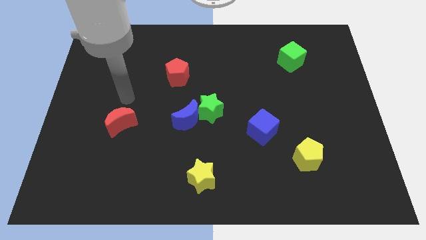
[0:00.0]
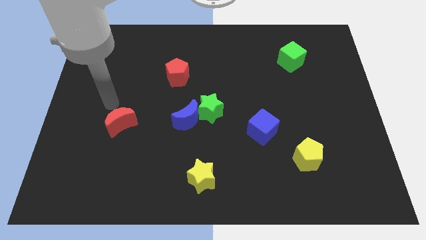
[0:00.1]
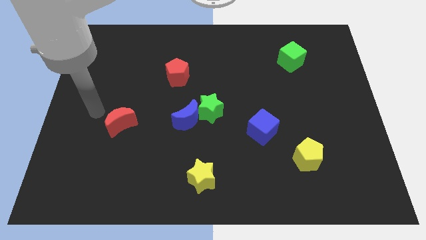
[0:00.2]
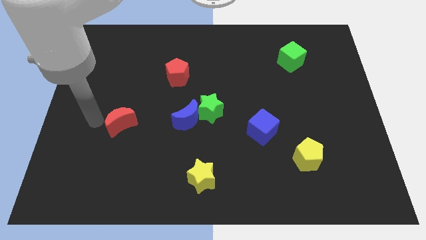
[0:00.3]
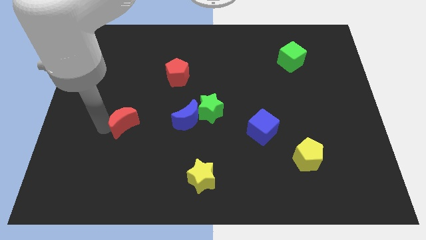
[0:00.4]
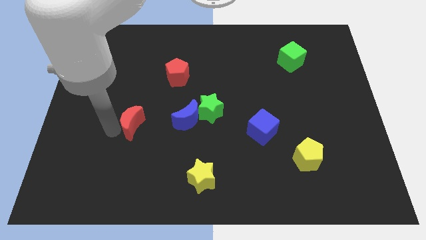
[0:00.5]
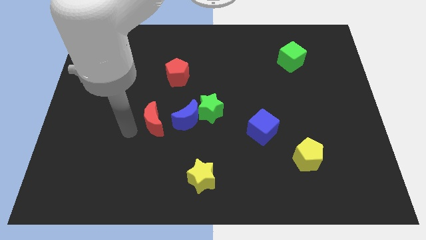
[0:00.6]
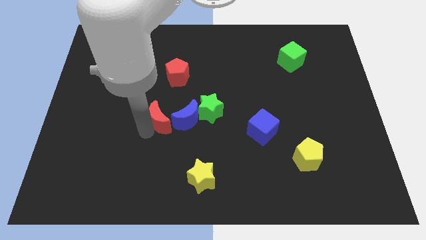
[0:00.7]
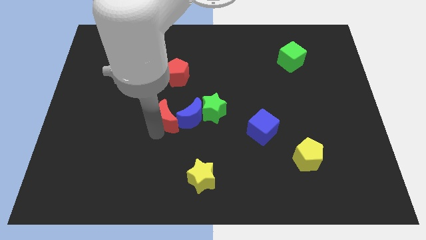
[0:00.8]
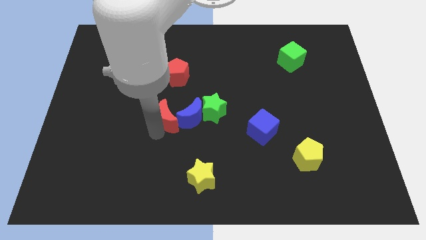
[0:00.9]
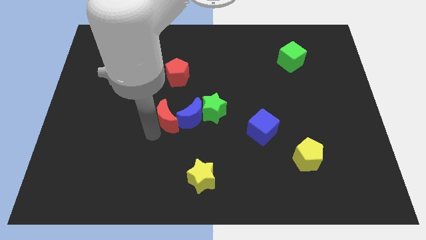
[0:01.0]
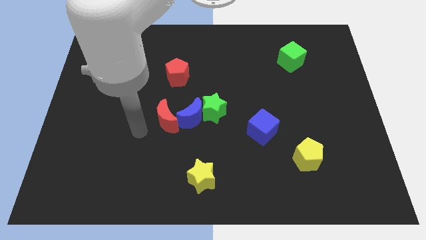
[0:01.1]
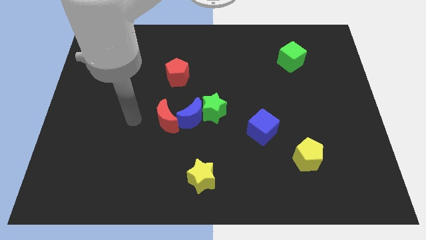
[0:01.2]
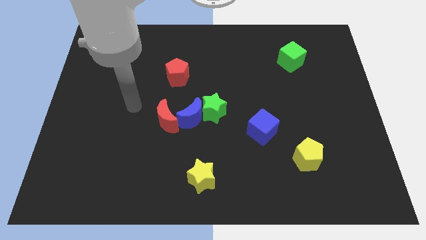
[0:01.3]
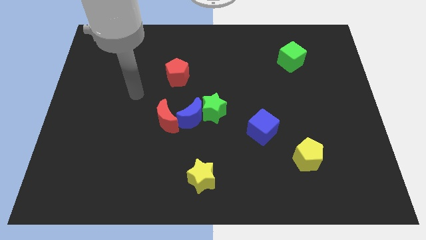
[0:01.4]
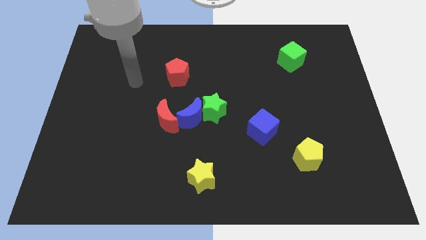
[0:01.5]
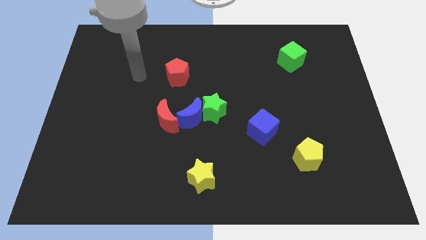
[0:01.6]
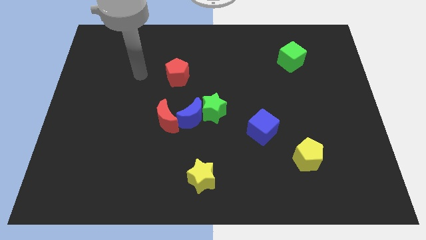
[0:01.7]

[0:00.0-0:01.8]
push the red moon to the left of blue moon

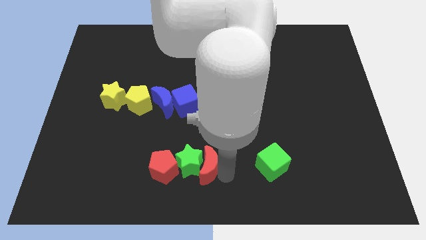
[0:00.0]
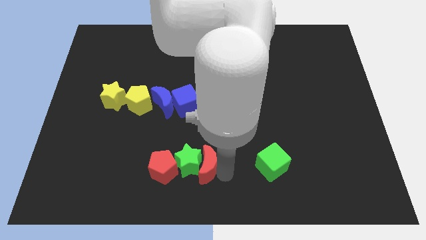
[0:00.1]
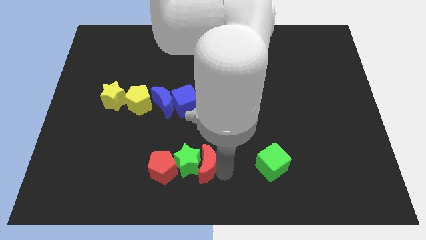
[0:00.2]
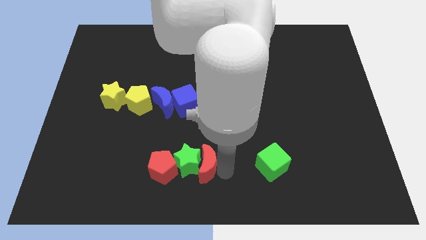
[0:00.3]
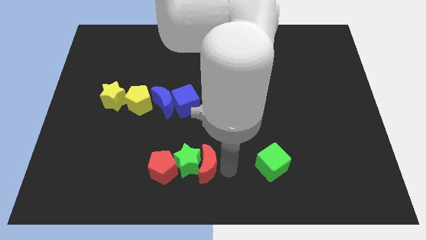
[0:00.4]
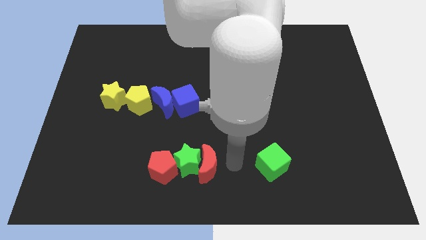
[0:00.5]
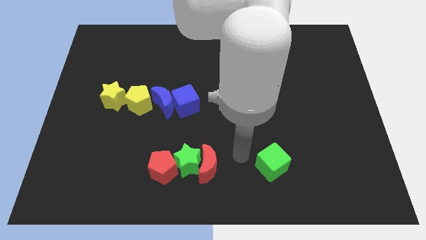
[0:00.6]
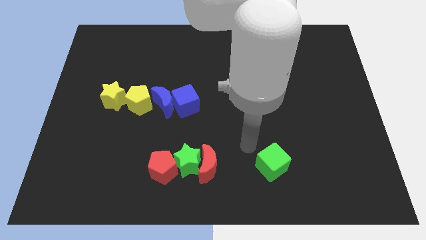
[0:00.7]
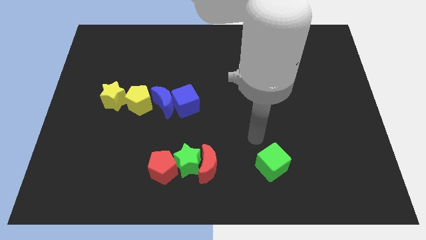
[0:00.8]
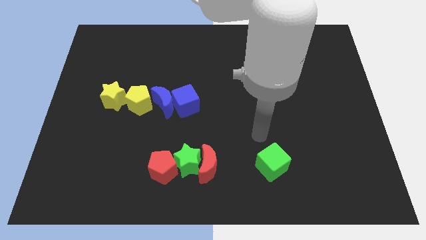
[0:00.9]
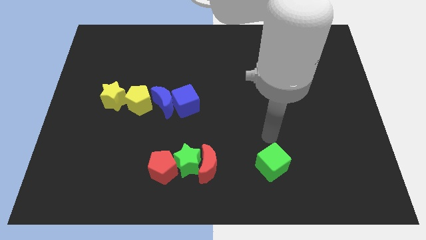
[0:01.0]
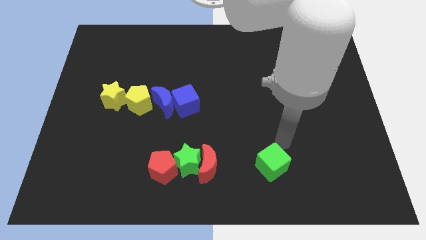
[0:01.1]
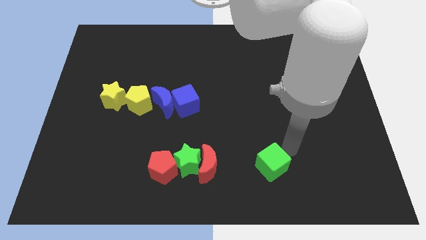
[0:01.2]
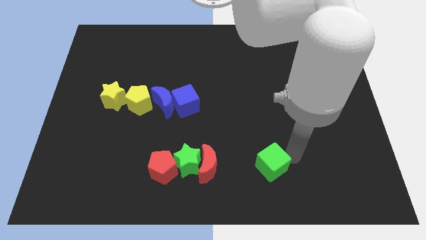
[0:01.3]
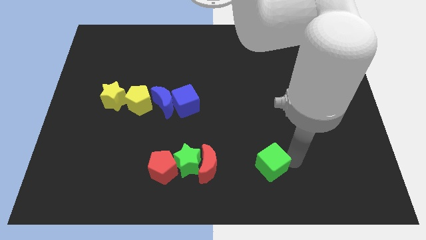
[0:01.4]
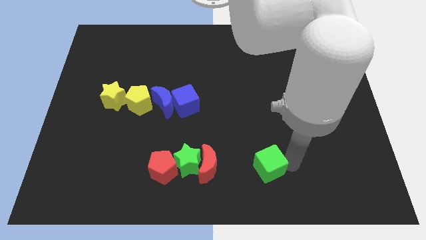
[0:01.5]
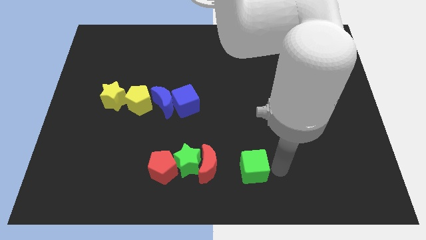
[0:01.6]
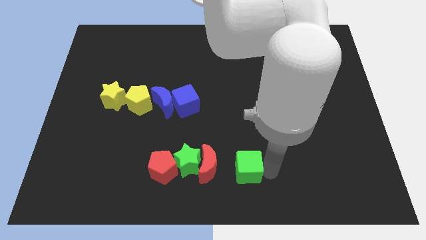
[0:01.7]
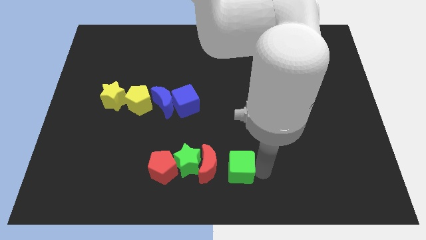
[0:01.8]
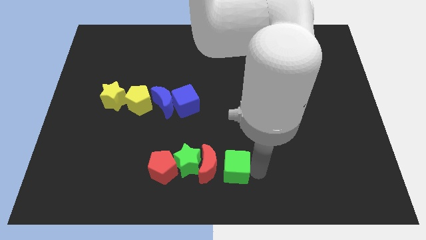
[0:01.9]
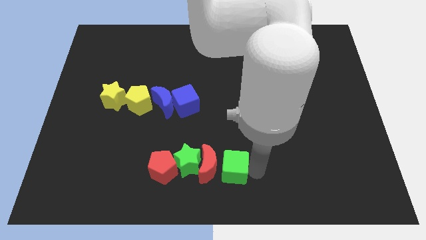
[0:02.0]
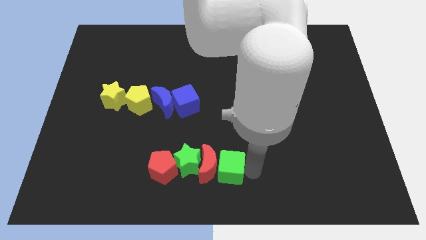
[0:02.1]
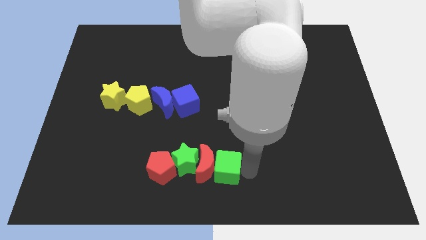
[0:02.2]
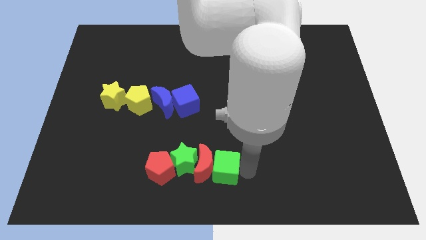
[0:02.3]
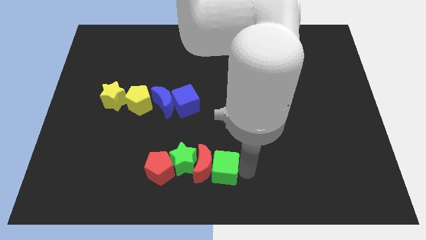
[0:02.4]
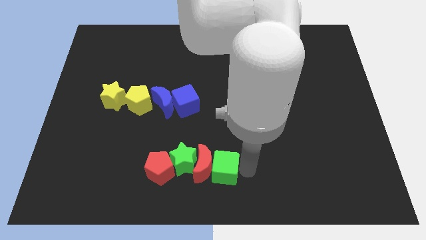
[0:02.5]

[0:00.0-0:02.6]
move the green cube to the right of red moon to make a horizontal line

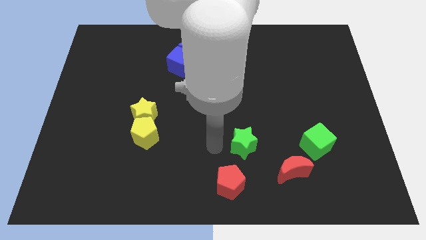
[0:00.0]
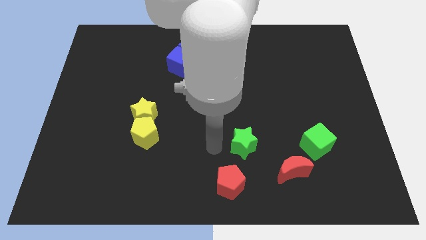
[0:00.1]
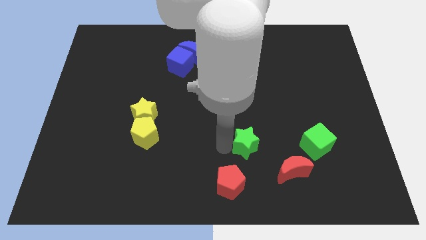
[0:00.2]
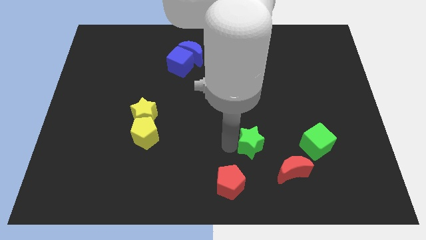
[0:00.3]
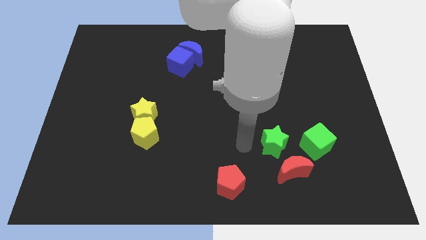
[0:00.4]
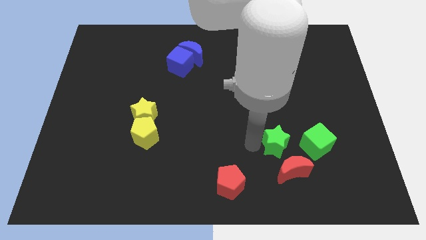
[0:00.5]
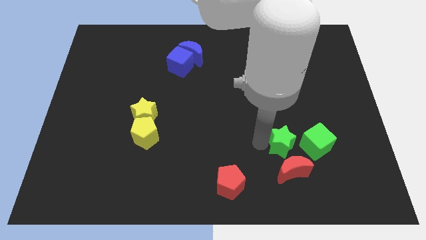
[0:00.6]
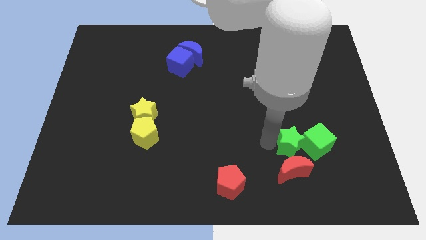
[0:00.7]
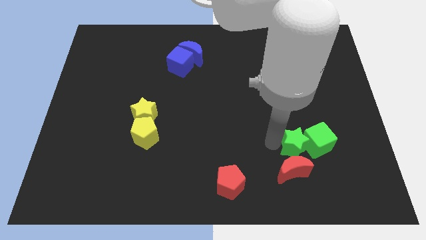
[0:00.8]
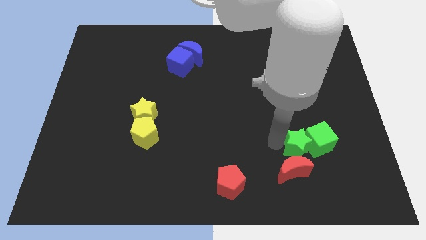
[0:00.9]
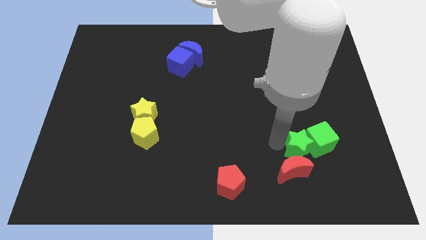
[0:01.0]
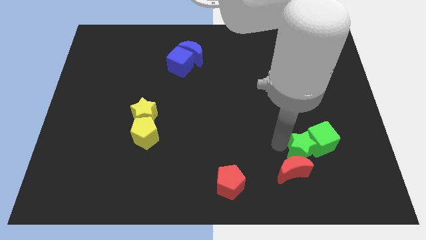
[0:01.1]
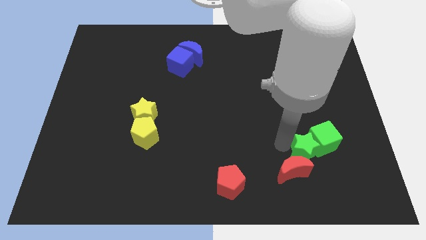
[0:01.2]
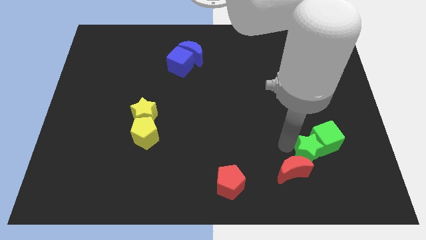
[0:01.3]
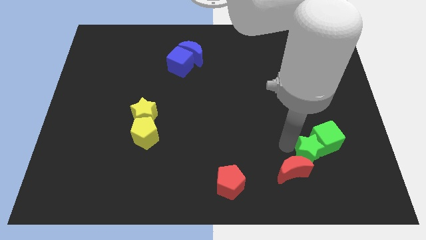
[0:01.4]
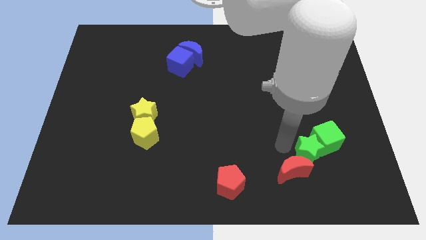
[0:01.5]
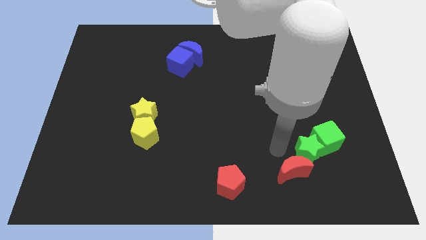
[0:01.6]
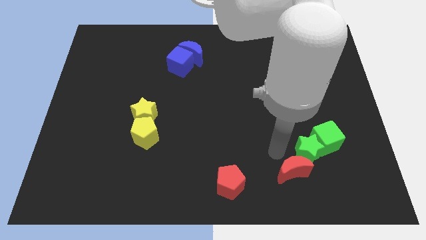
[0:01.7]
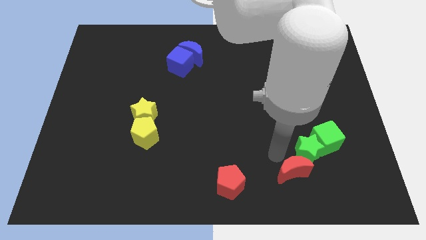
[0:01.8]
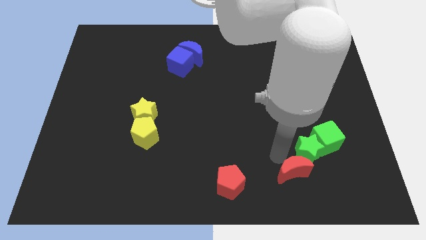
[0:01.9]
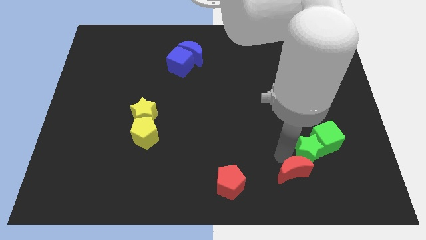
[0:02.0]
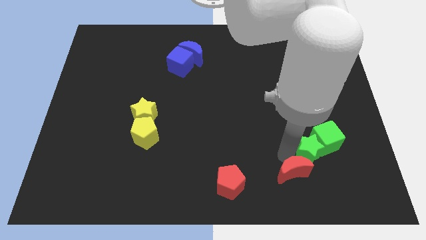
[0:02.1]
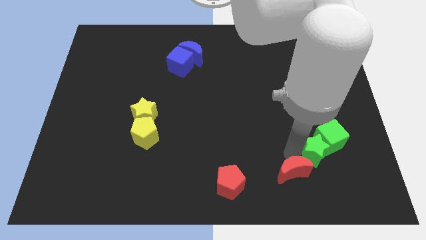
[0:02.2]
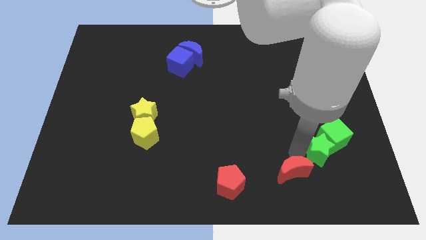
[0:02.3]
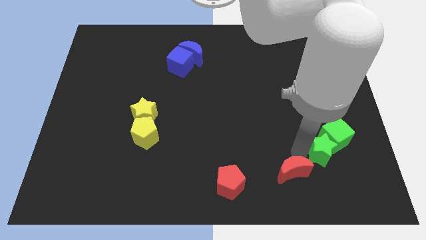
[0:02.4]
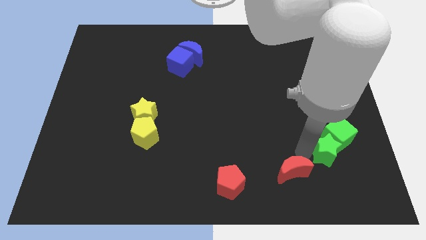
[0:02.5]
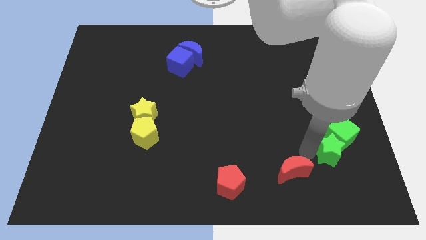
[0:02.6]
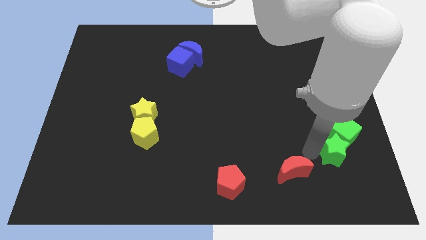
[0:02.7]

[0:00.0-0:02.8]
move the green star into the green cube

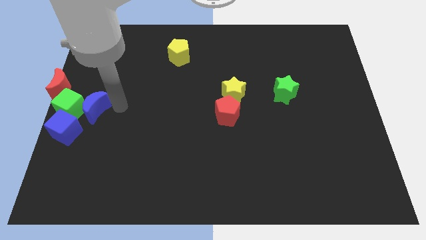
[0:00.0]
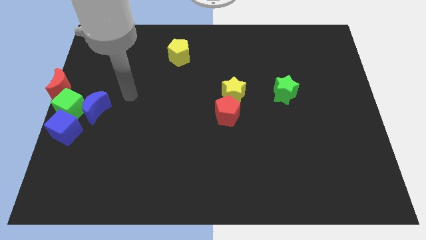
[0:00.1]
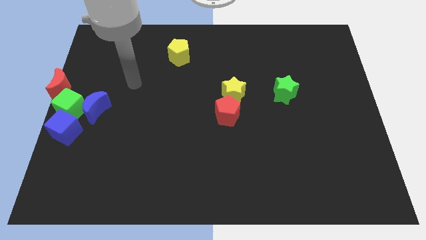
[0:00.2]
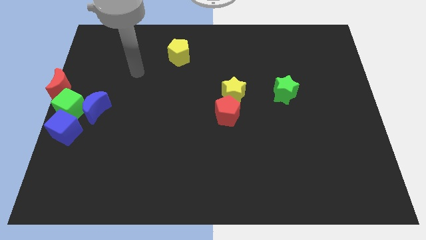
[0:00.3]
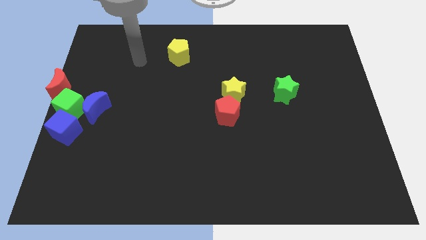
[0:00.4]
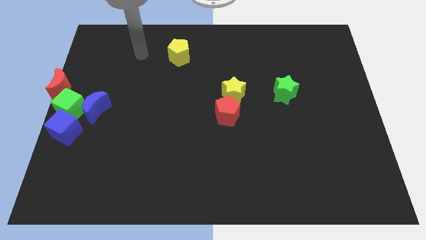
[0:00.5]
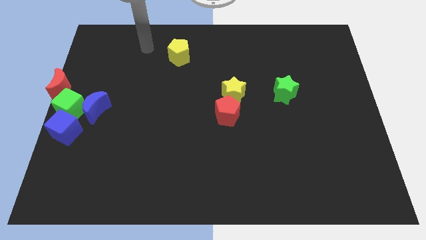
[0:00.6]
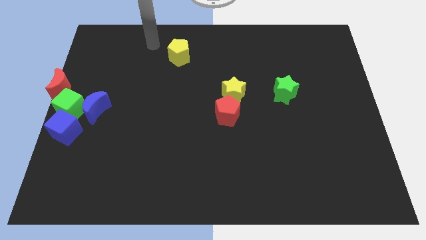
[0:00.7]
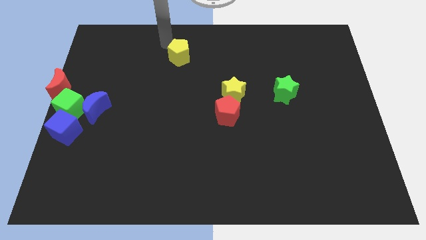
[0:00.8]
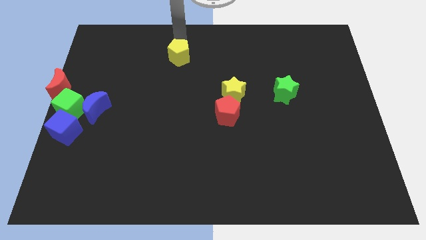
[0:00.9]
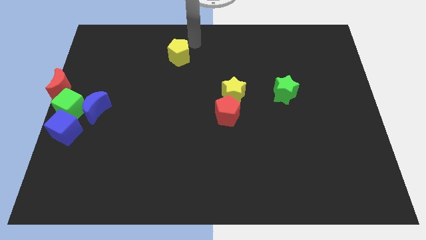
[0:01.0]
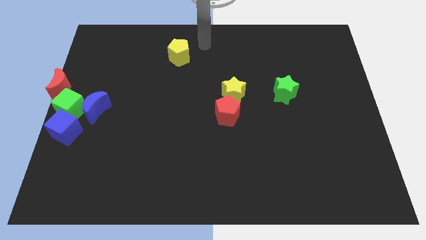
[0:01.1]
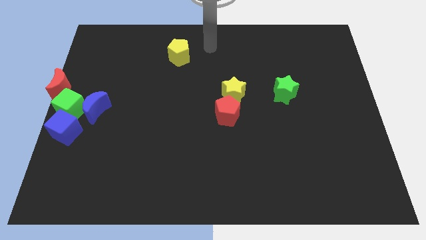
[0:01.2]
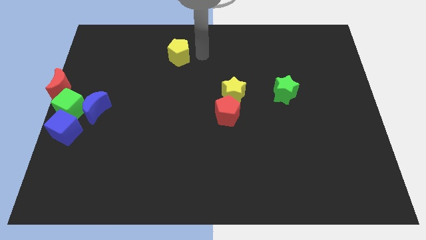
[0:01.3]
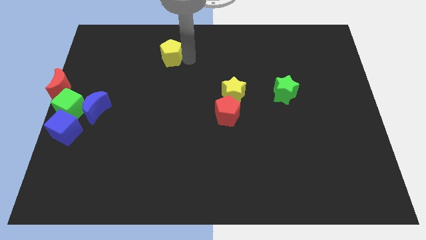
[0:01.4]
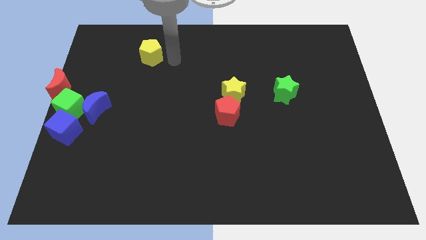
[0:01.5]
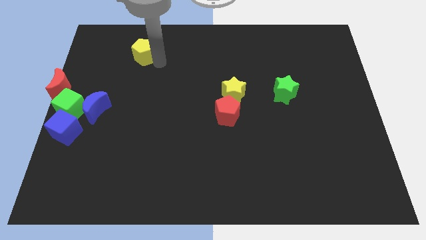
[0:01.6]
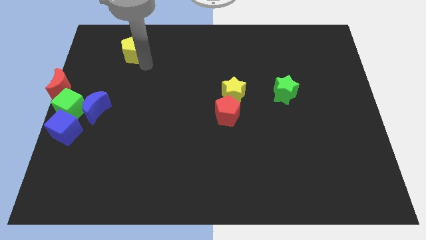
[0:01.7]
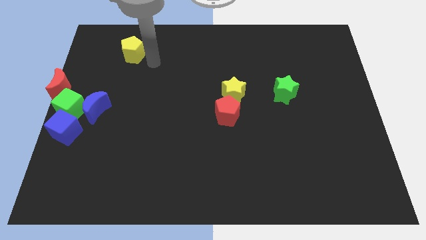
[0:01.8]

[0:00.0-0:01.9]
push the yellow pentagon to the left
